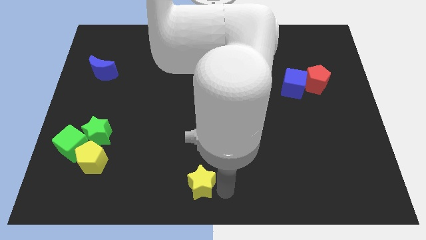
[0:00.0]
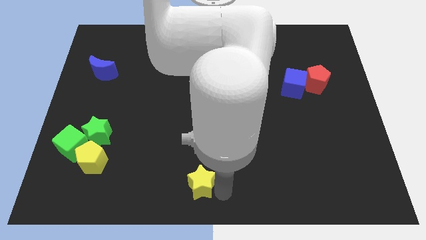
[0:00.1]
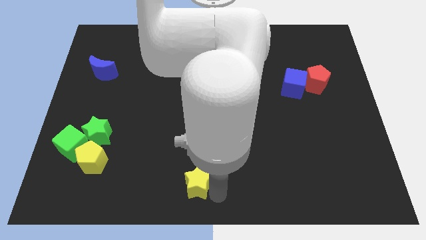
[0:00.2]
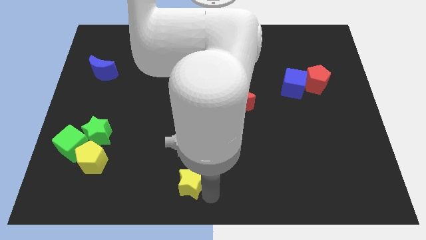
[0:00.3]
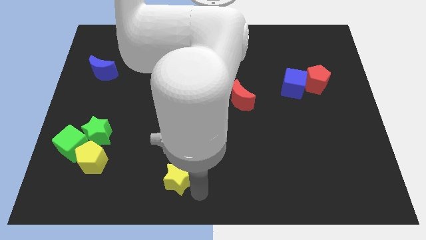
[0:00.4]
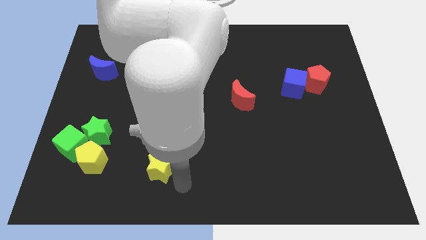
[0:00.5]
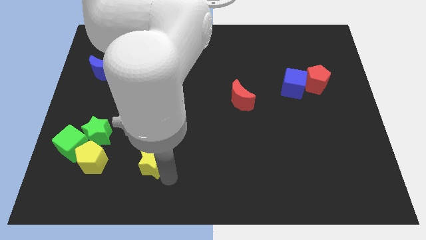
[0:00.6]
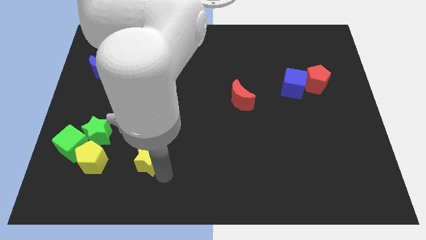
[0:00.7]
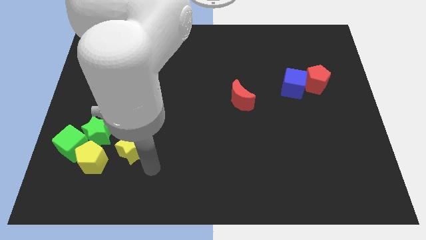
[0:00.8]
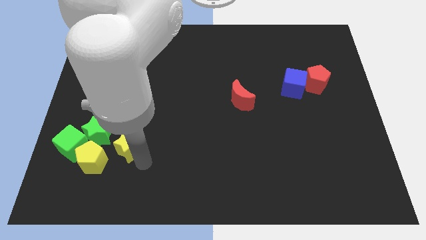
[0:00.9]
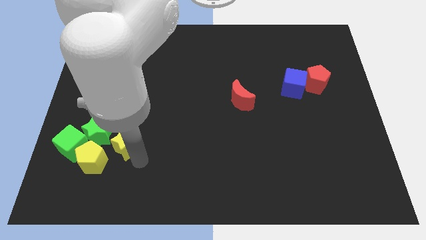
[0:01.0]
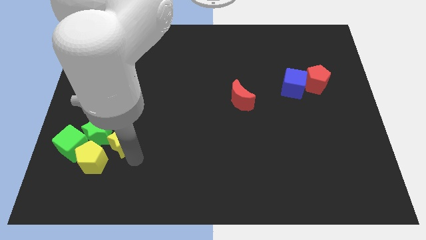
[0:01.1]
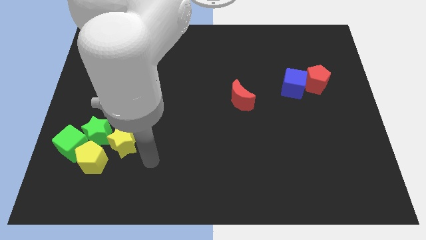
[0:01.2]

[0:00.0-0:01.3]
push the yellow star into the green star

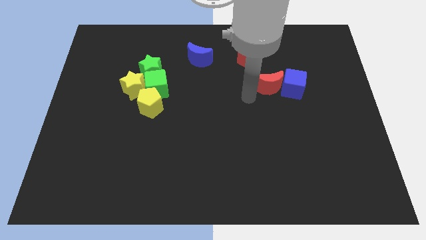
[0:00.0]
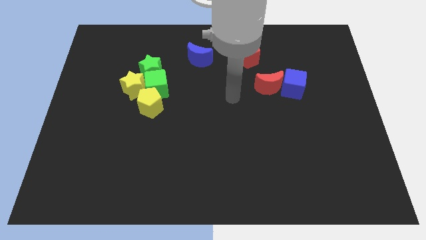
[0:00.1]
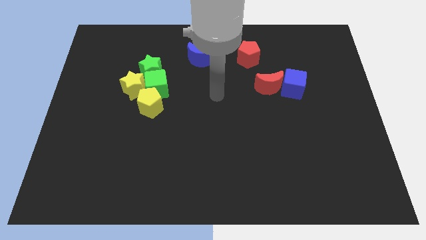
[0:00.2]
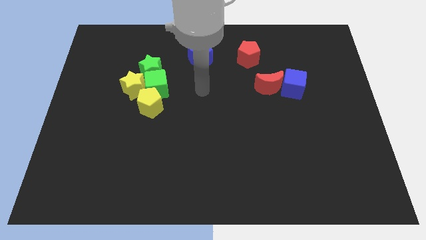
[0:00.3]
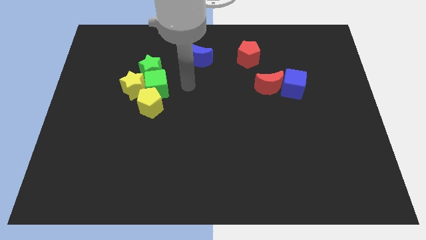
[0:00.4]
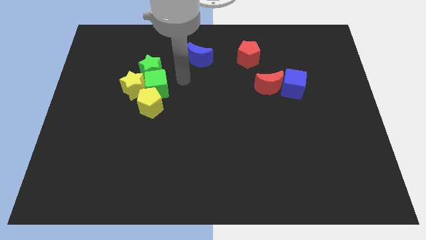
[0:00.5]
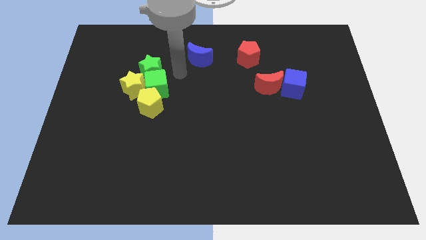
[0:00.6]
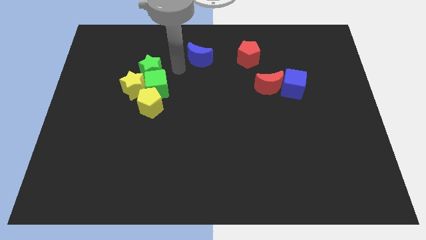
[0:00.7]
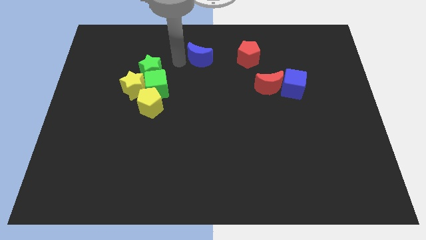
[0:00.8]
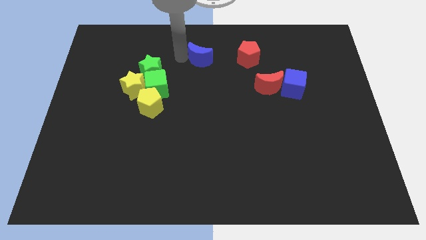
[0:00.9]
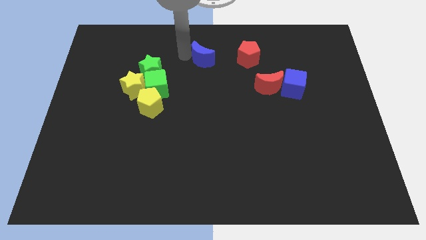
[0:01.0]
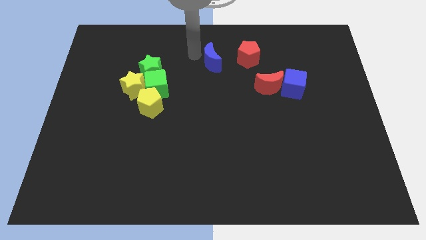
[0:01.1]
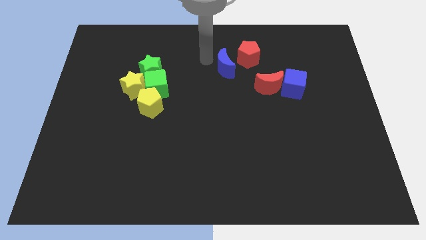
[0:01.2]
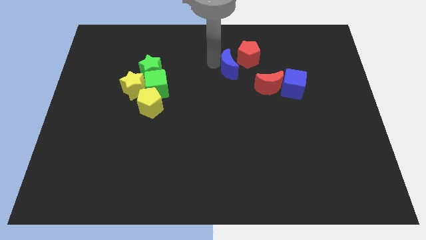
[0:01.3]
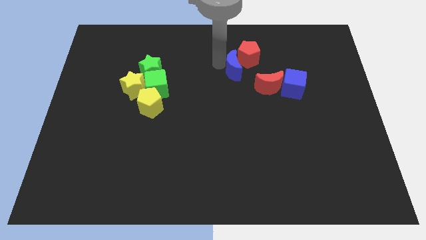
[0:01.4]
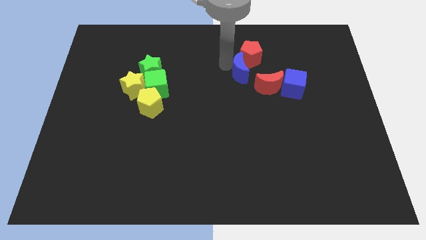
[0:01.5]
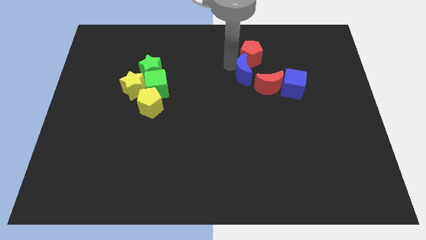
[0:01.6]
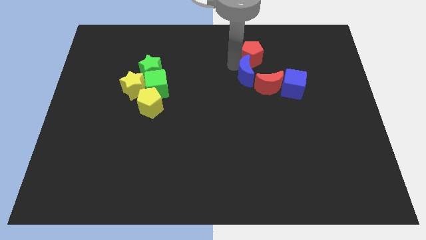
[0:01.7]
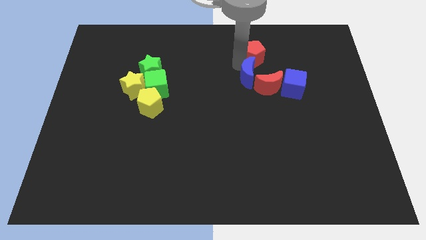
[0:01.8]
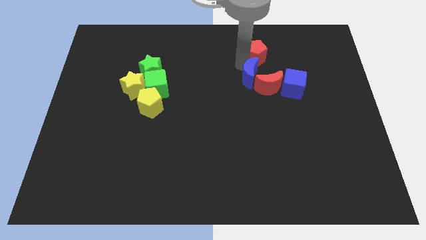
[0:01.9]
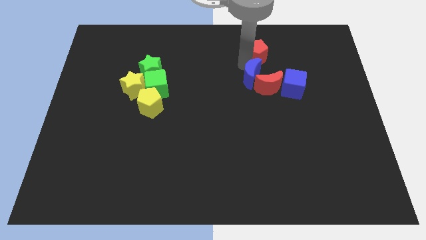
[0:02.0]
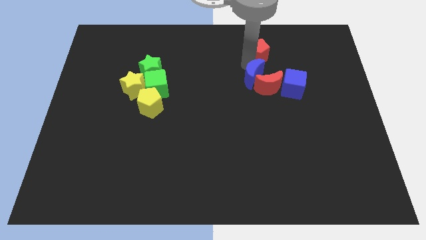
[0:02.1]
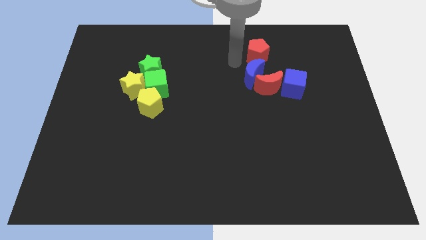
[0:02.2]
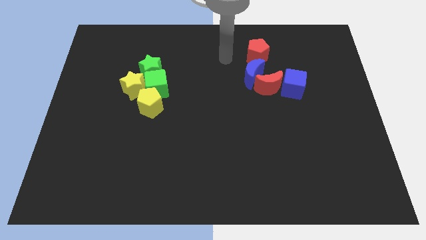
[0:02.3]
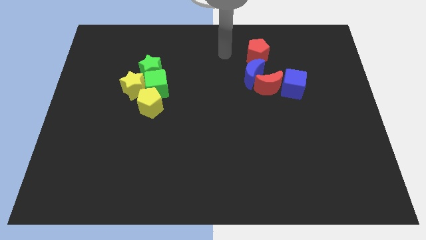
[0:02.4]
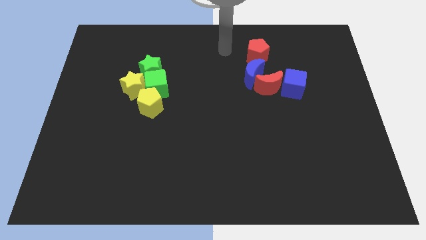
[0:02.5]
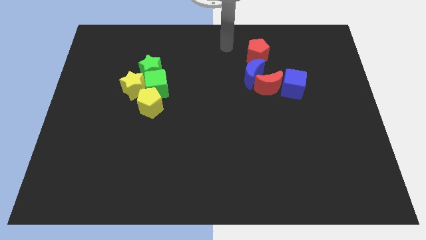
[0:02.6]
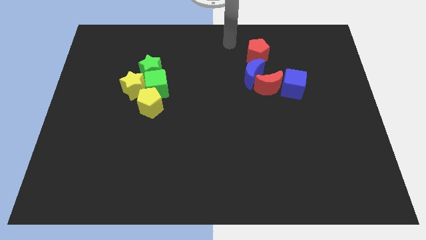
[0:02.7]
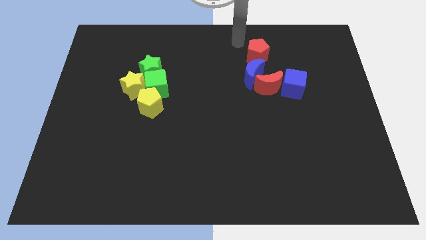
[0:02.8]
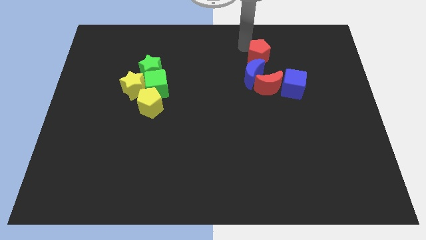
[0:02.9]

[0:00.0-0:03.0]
move the blue crescent in between the red blocks

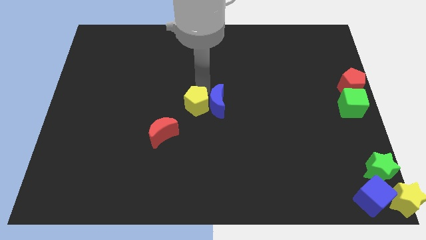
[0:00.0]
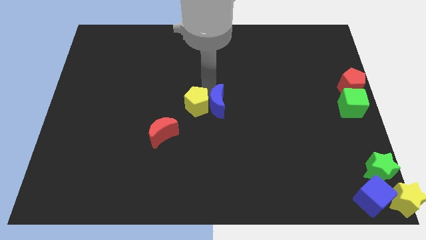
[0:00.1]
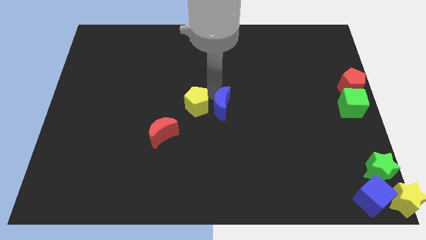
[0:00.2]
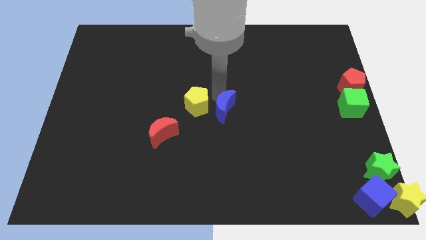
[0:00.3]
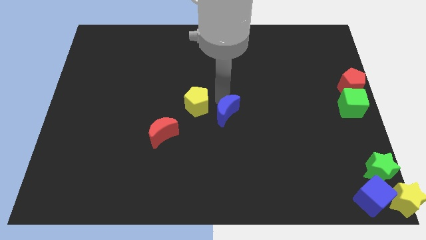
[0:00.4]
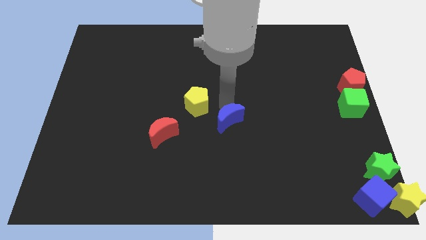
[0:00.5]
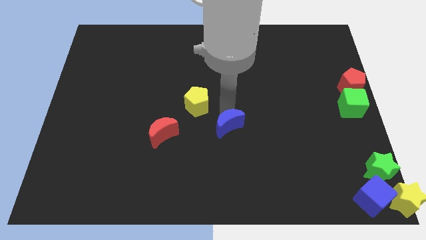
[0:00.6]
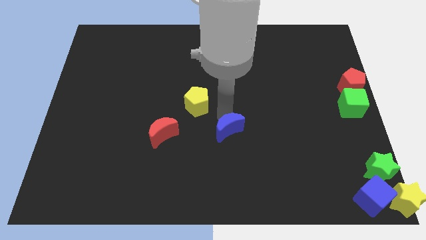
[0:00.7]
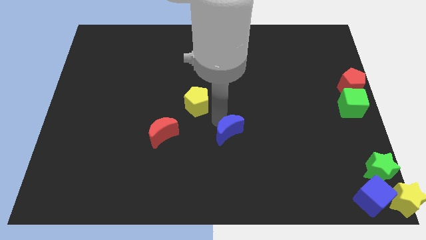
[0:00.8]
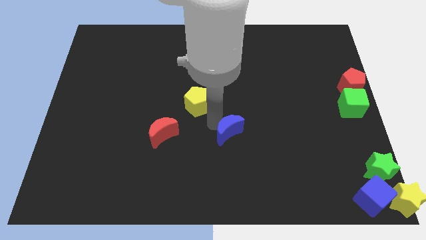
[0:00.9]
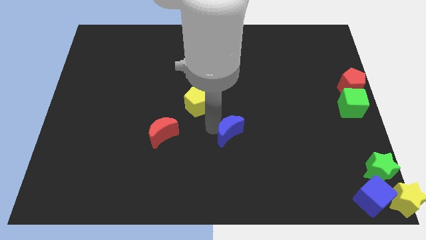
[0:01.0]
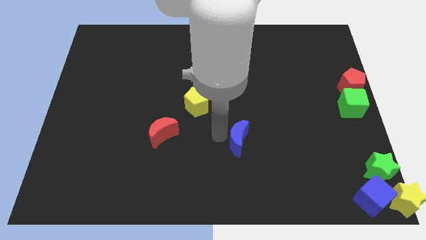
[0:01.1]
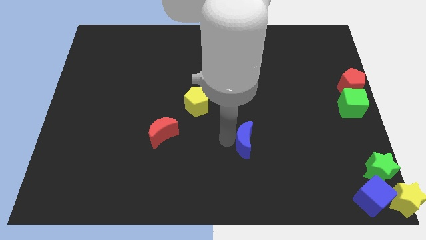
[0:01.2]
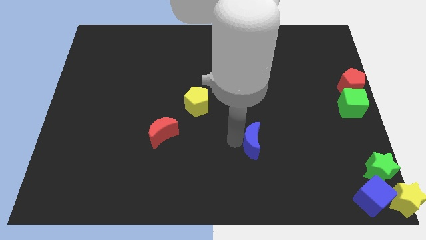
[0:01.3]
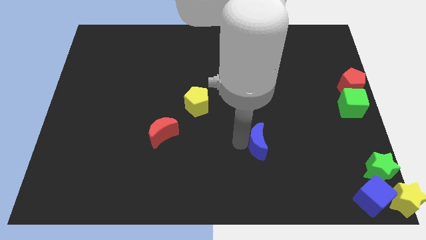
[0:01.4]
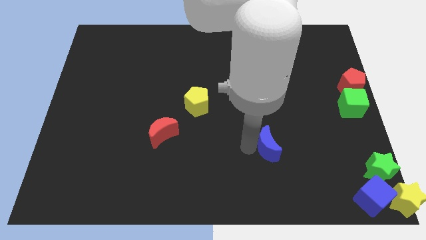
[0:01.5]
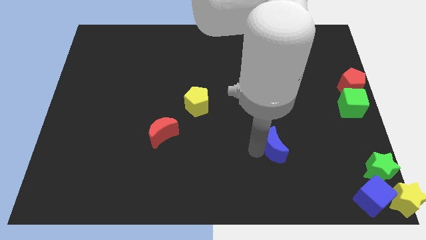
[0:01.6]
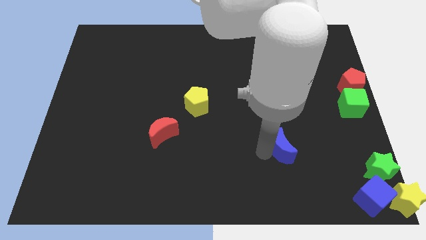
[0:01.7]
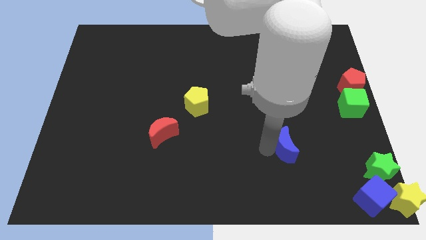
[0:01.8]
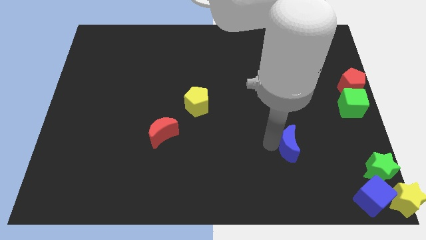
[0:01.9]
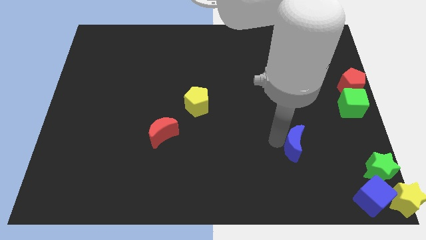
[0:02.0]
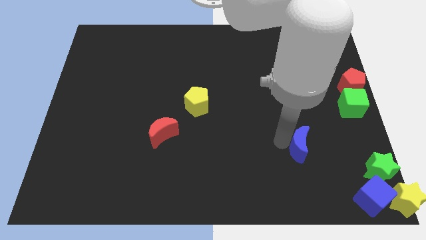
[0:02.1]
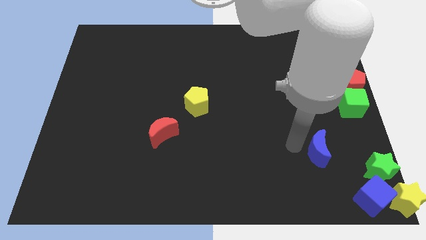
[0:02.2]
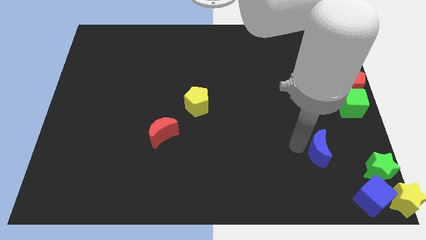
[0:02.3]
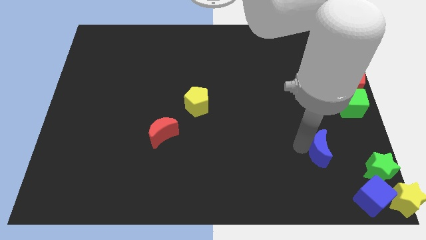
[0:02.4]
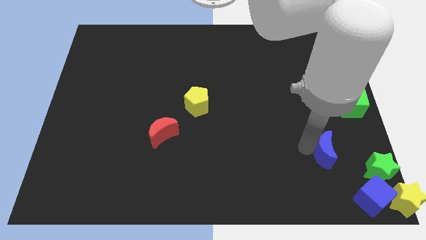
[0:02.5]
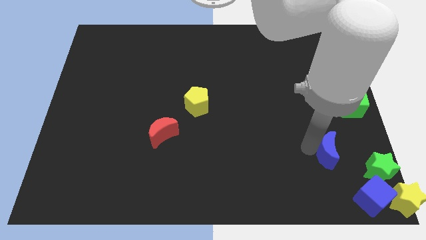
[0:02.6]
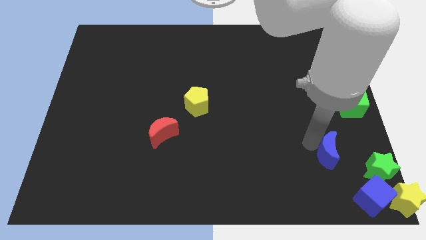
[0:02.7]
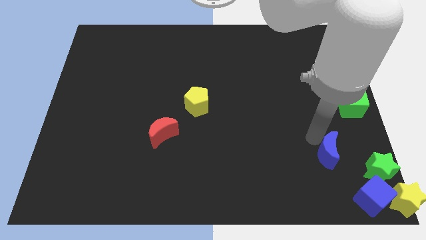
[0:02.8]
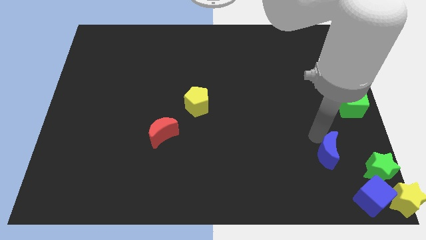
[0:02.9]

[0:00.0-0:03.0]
separate blue crescent from yellow pentagon

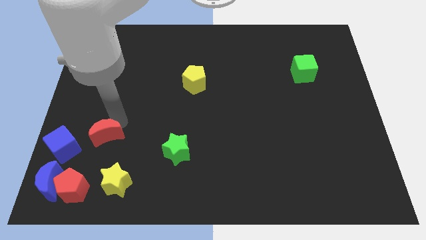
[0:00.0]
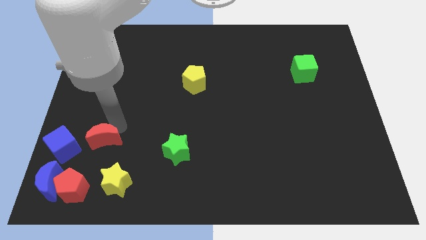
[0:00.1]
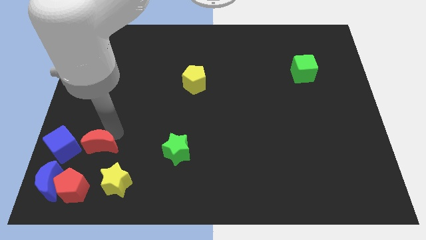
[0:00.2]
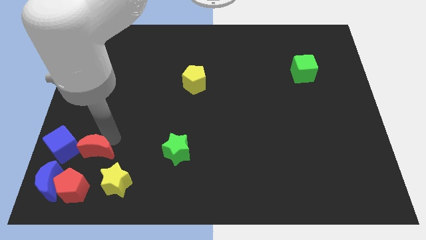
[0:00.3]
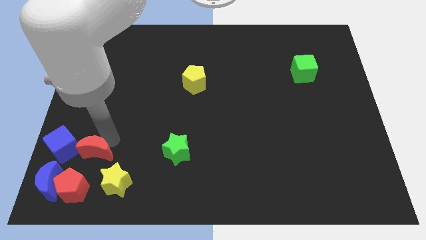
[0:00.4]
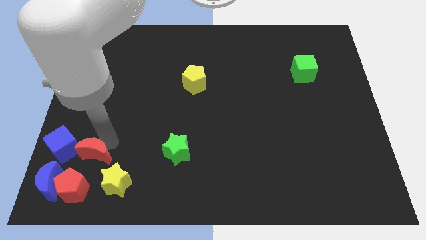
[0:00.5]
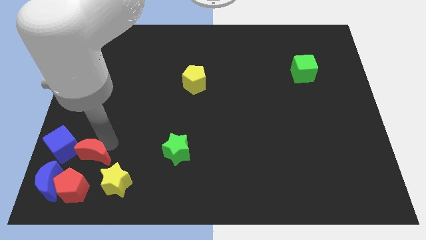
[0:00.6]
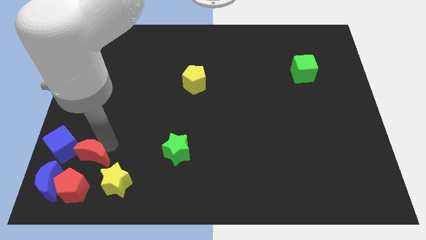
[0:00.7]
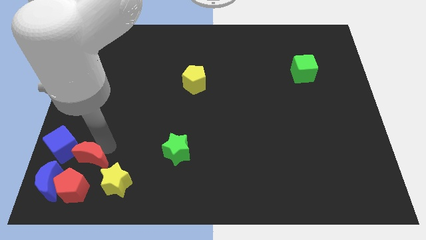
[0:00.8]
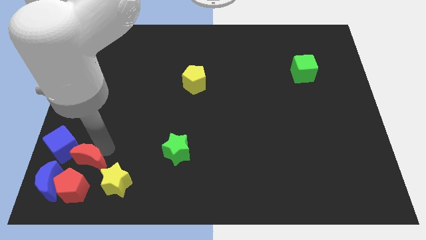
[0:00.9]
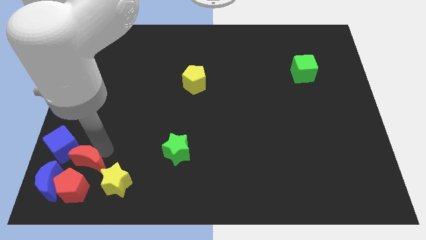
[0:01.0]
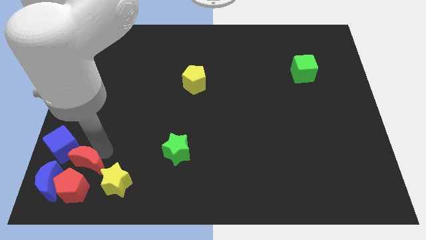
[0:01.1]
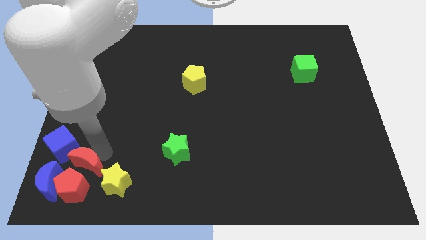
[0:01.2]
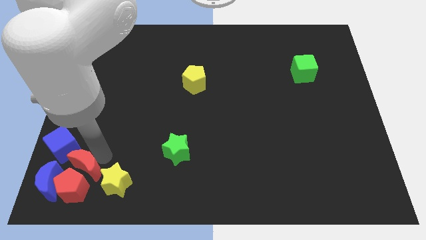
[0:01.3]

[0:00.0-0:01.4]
place the red crescent above the red pentagon

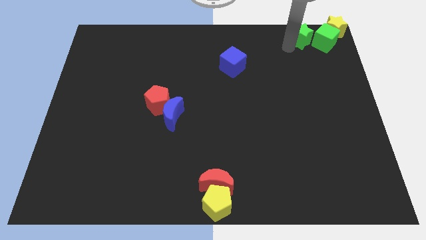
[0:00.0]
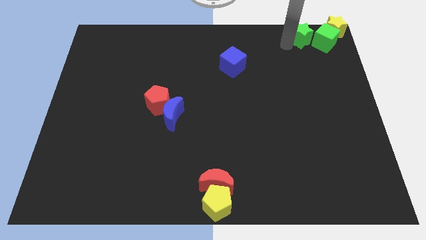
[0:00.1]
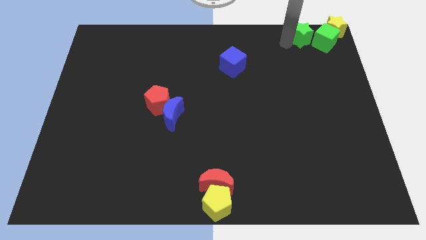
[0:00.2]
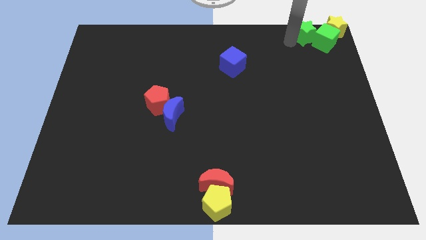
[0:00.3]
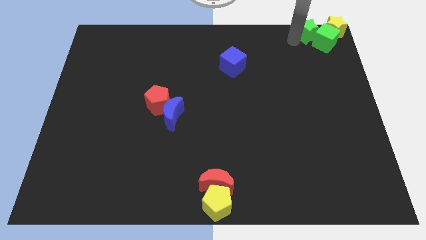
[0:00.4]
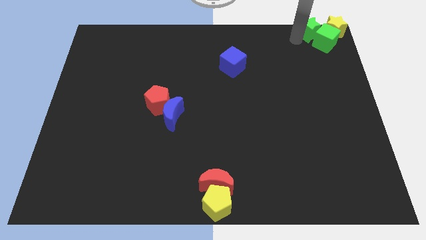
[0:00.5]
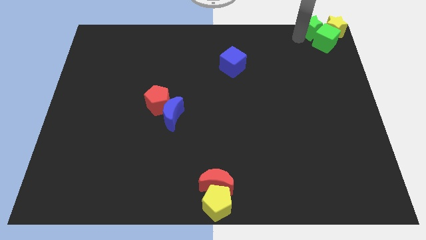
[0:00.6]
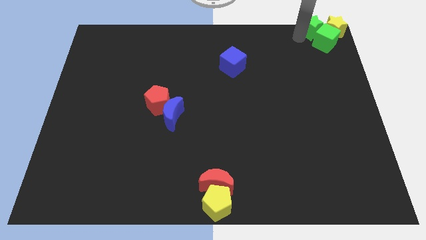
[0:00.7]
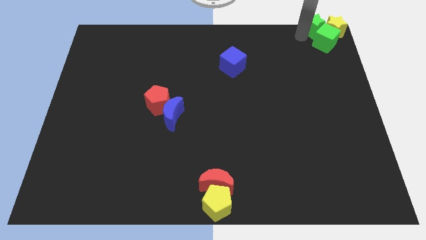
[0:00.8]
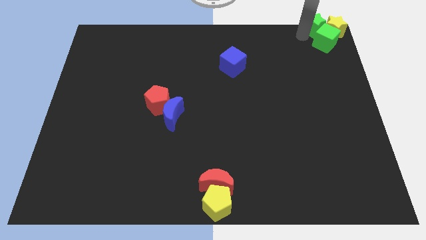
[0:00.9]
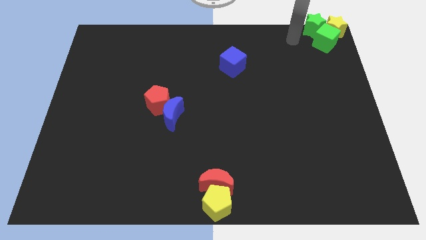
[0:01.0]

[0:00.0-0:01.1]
place the green star to the left of the yellow star
